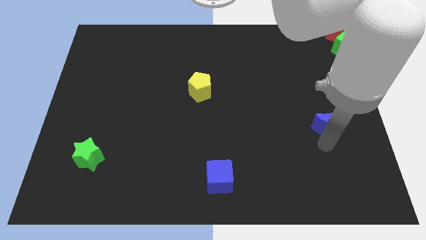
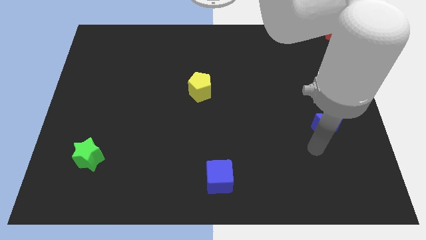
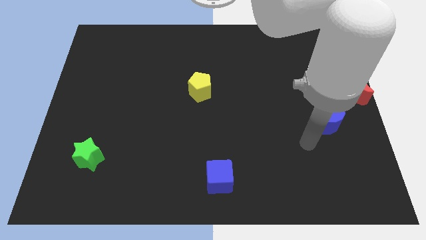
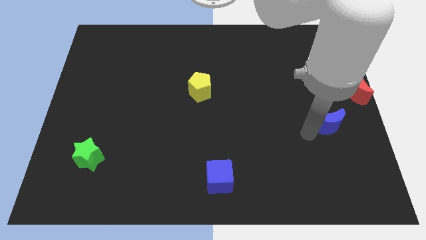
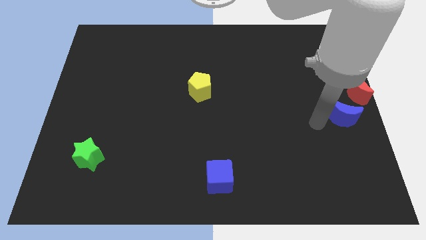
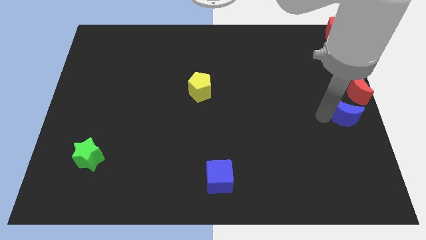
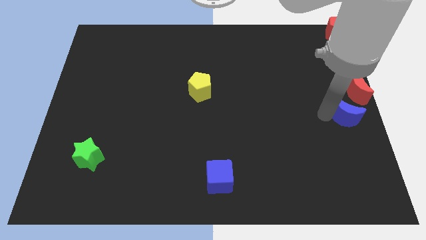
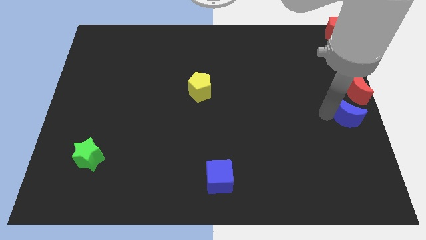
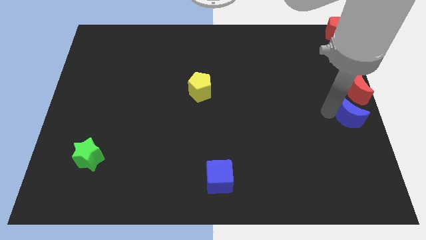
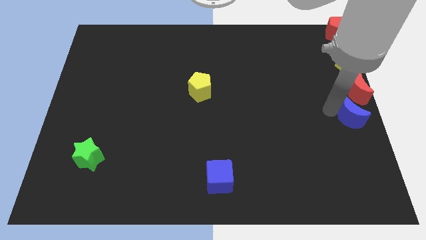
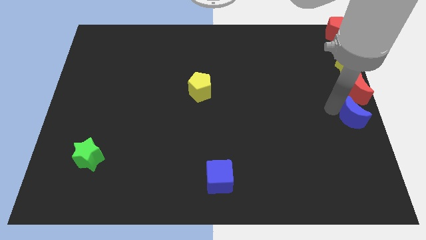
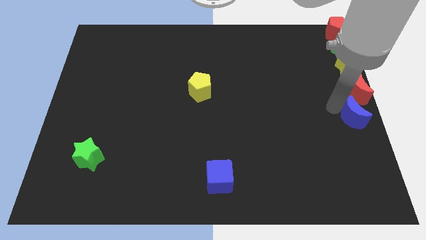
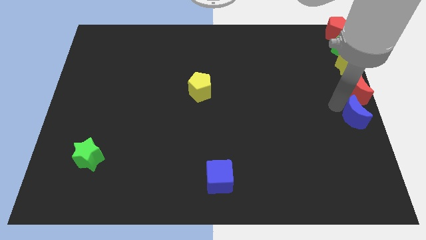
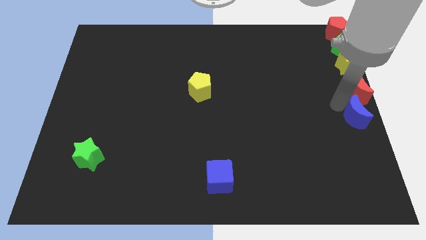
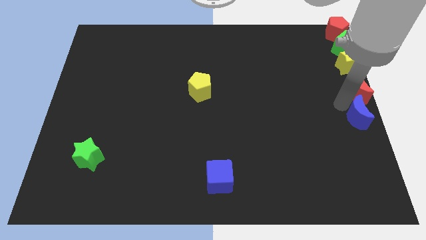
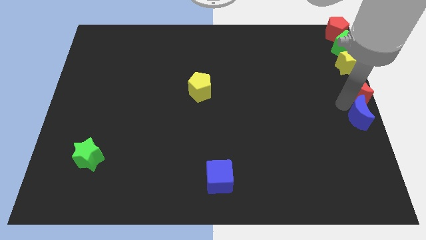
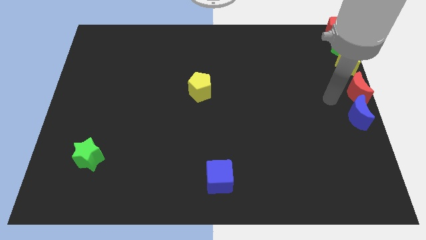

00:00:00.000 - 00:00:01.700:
move the blue moon to the bottom side of the red moon

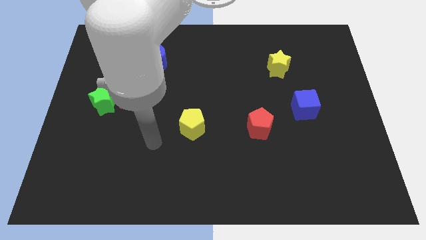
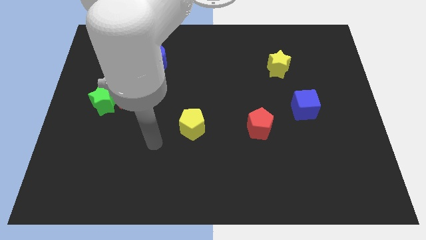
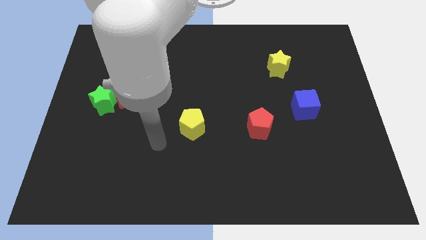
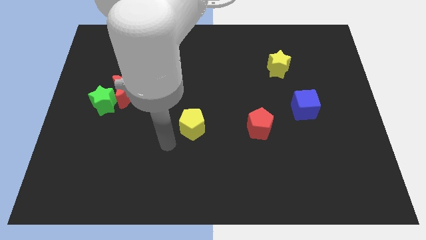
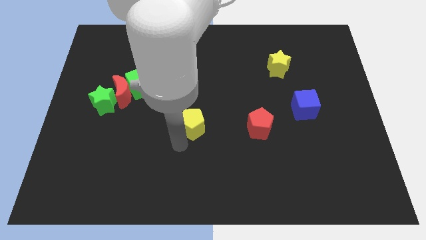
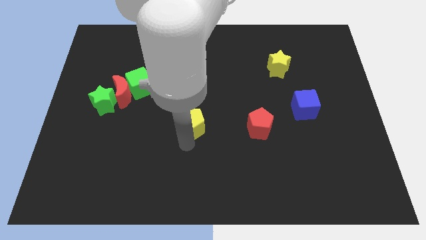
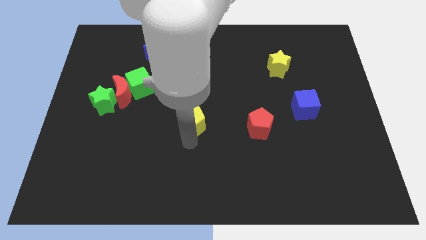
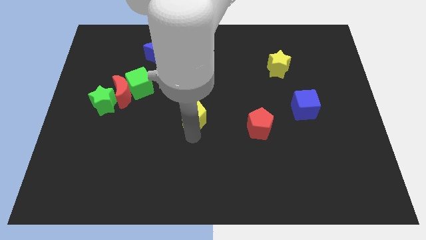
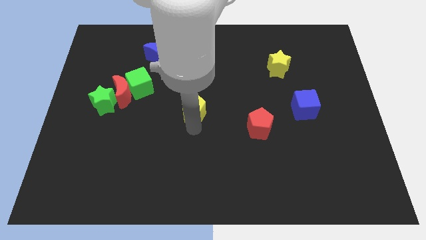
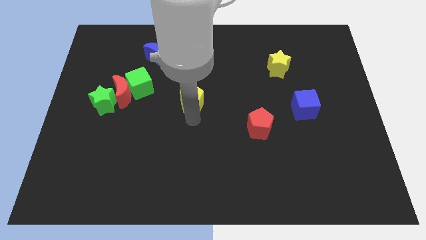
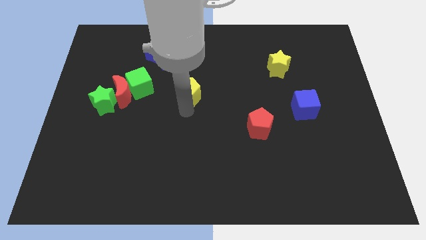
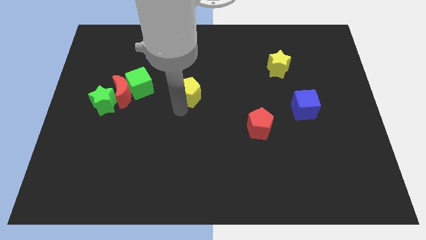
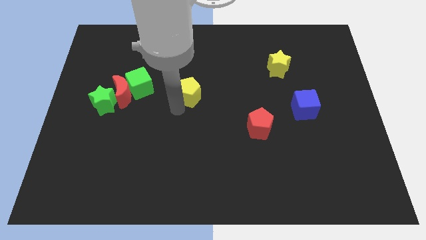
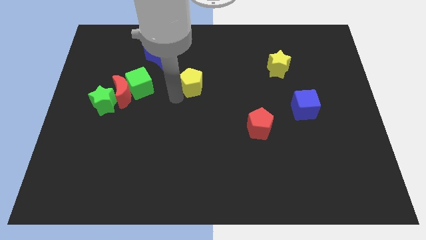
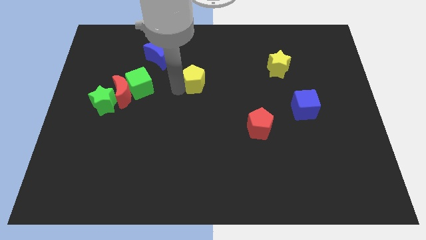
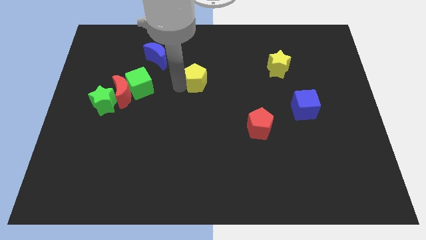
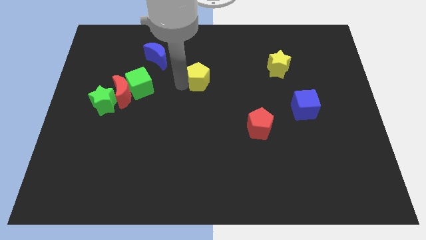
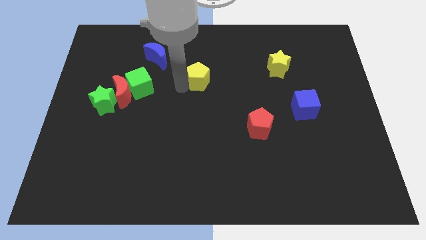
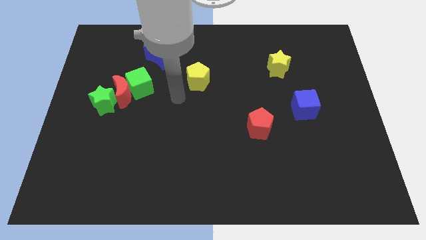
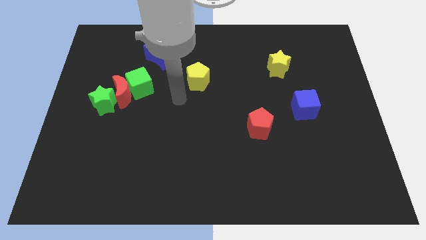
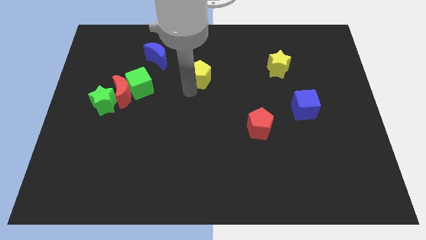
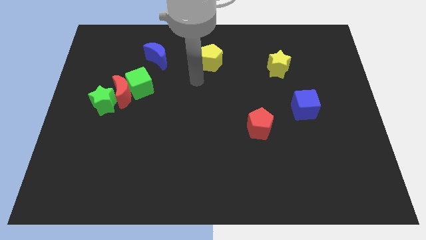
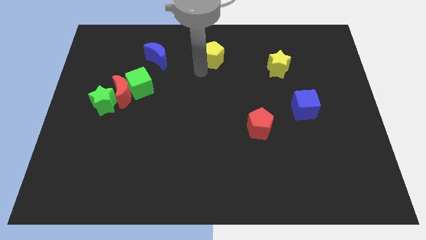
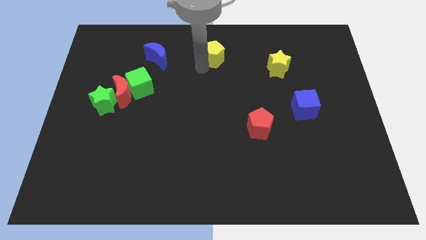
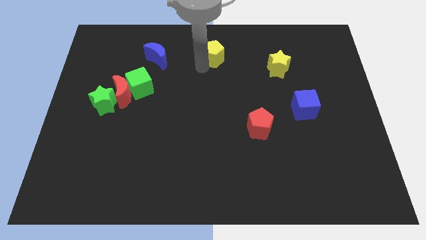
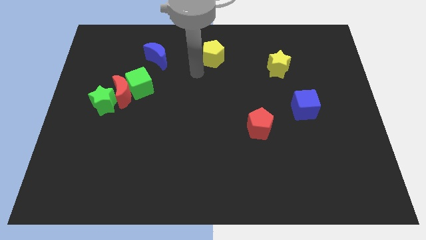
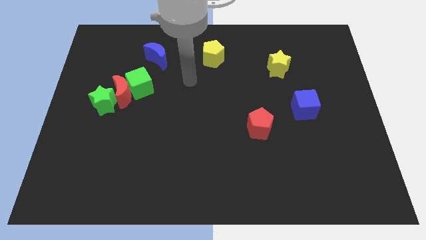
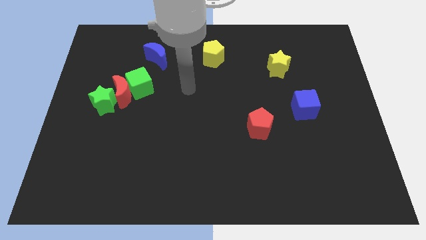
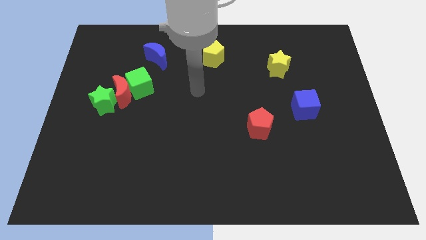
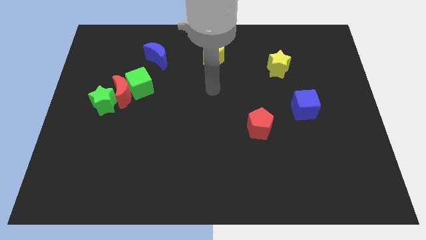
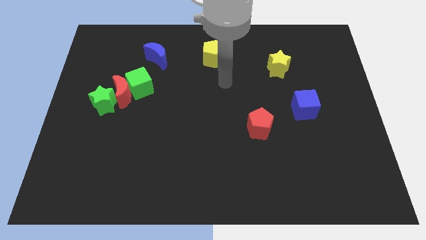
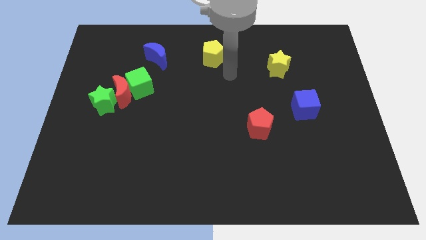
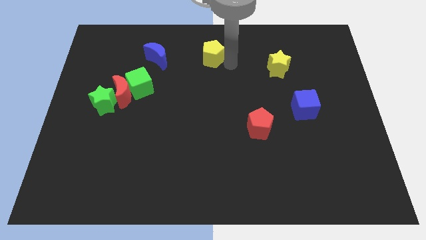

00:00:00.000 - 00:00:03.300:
put the yellow pentagon parallel to the right of the blue moon

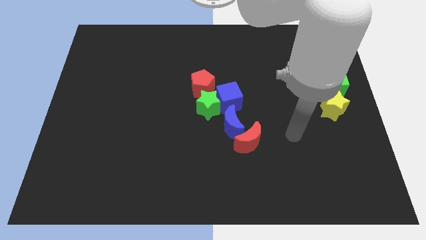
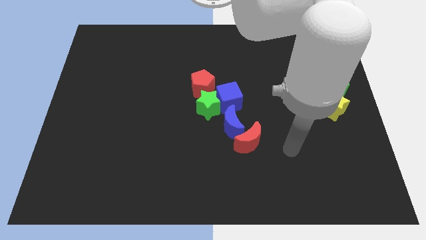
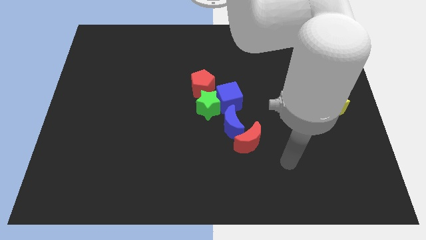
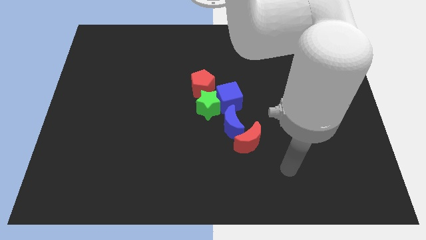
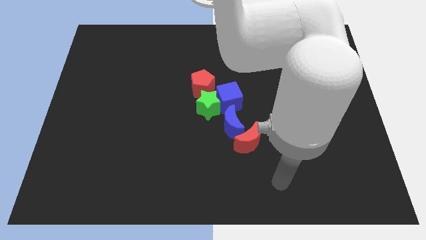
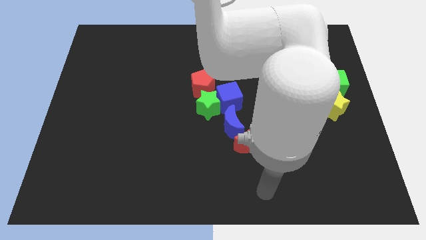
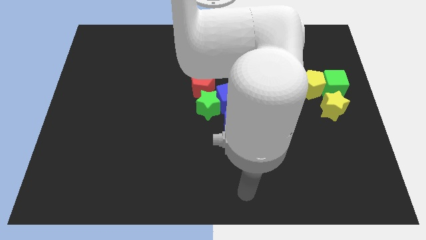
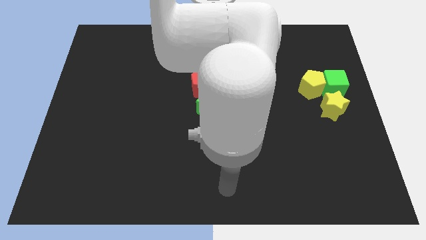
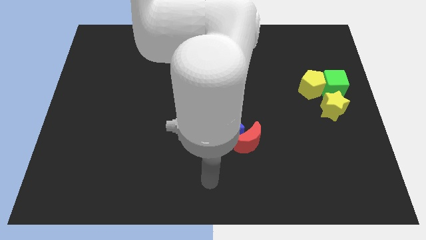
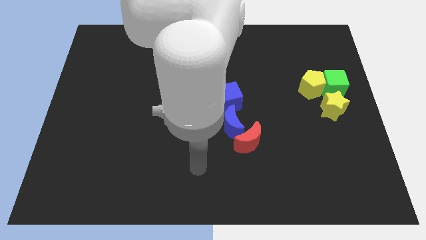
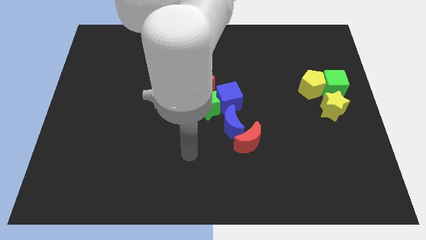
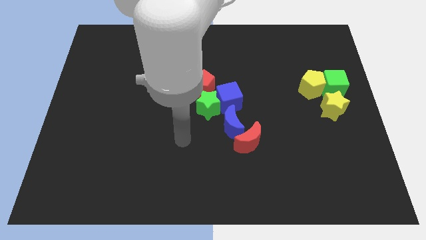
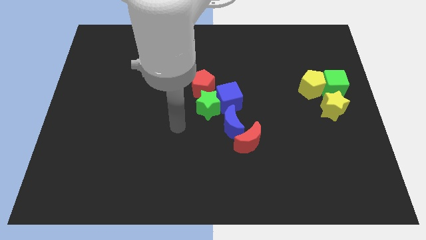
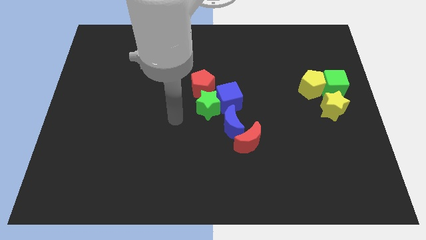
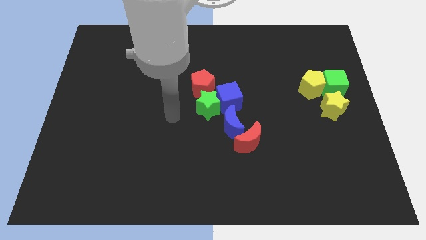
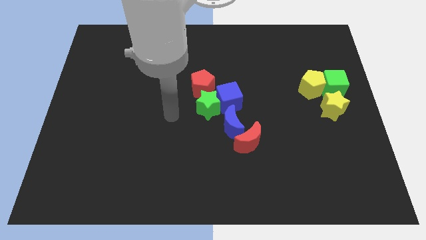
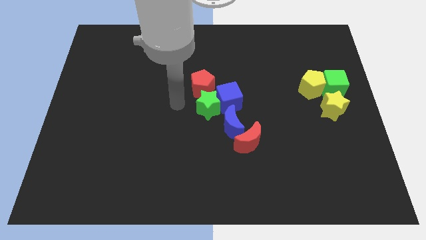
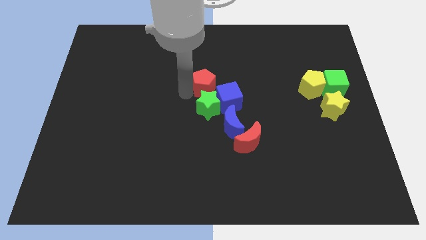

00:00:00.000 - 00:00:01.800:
point your arm at the left of the green star

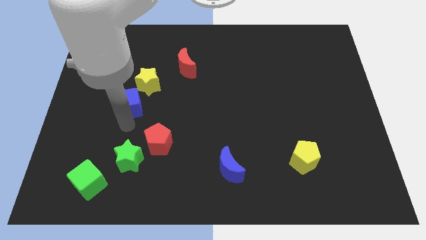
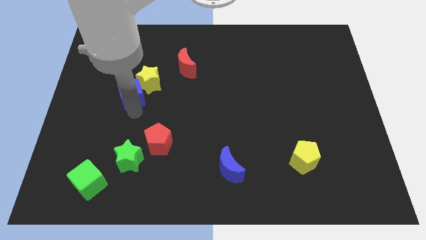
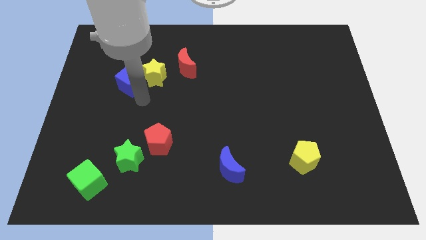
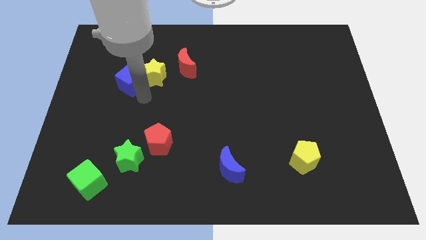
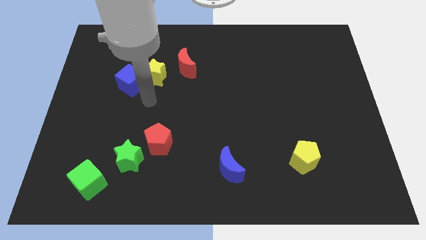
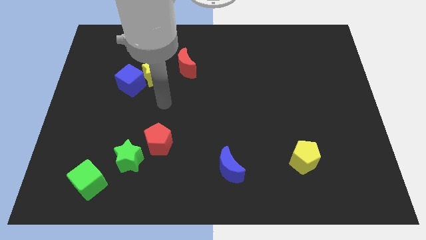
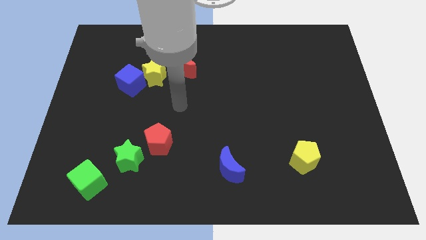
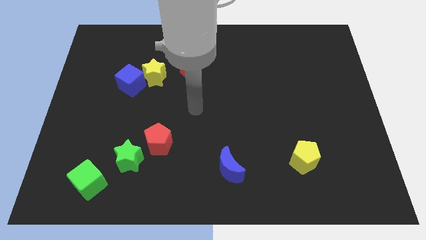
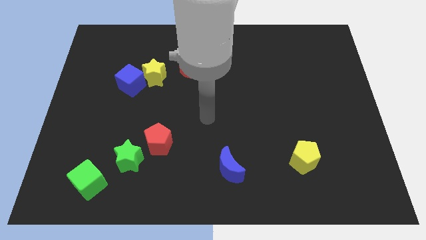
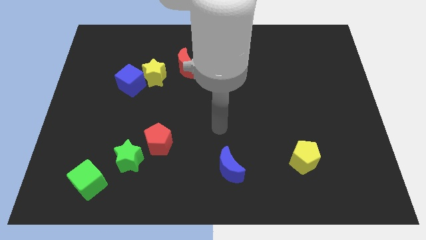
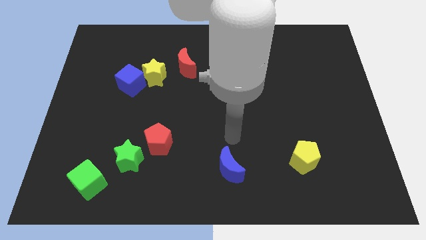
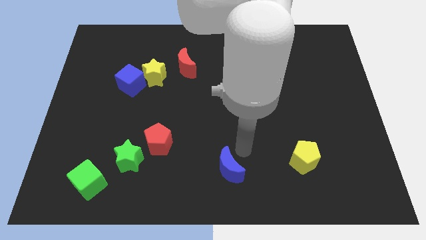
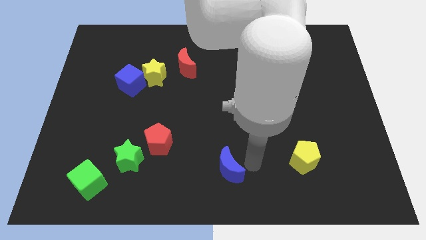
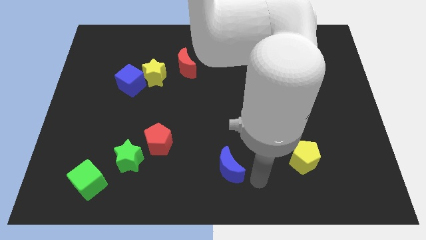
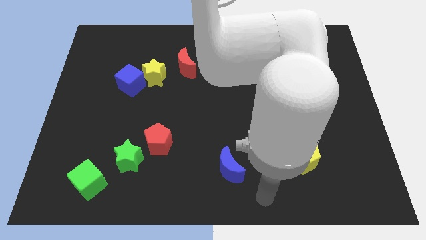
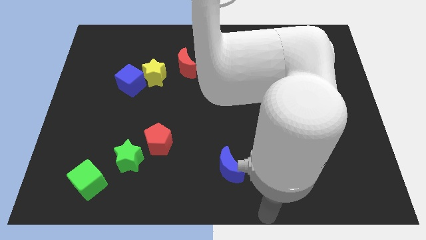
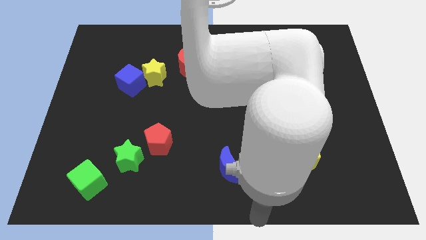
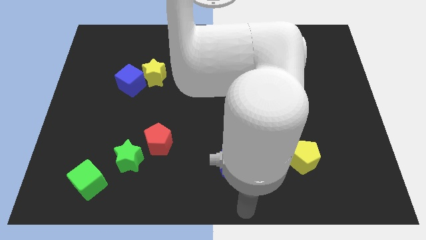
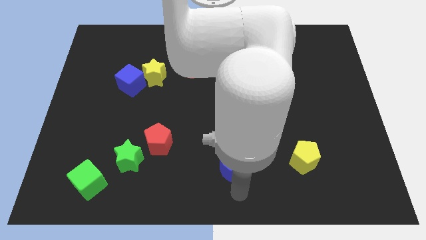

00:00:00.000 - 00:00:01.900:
move the blue cube towards the left side of the yellow star

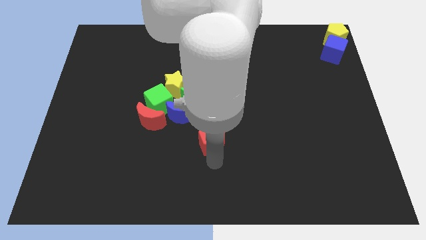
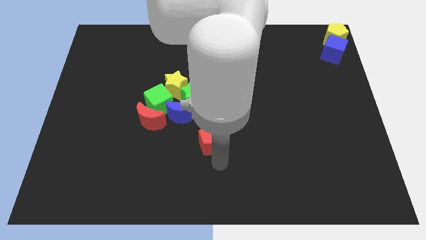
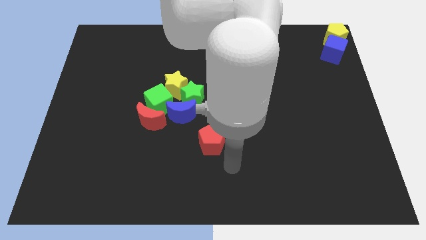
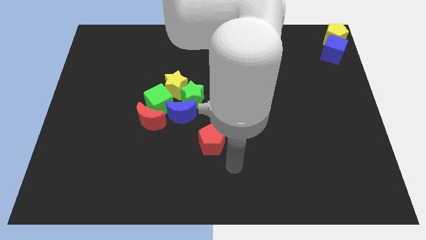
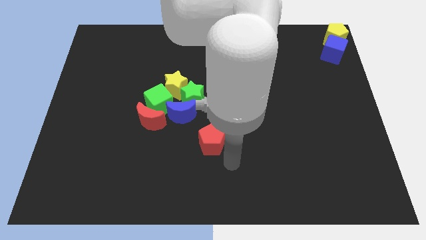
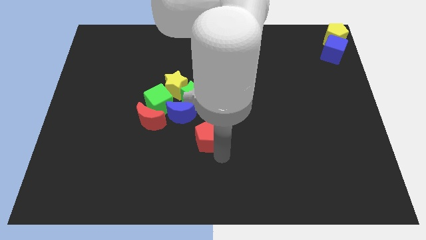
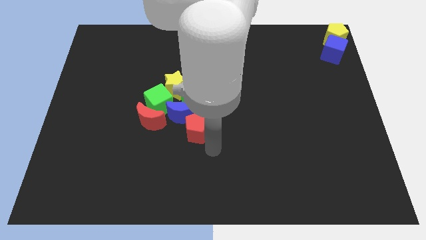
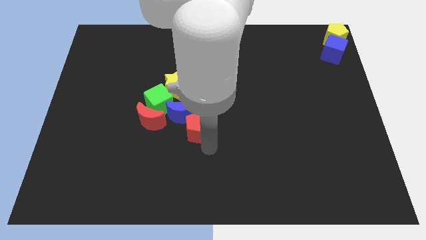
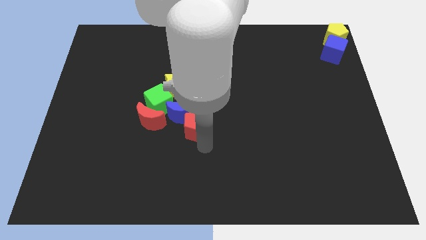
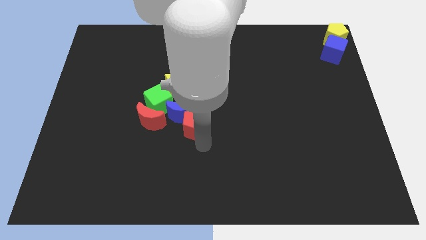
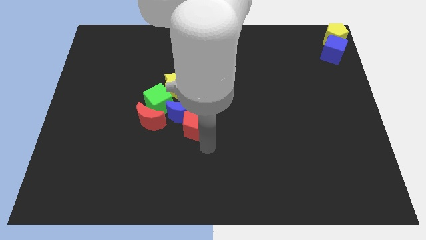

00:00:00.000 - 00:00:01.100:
push the red pentagon into the blue crescent towards the left center of the board
